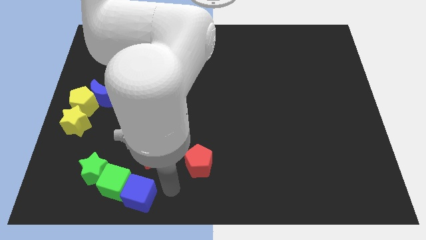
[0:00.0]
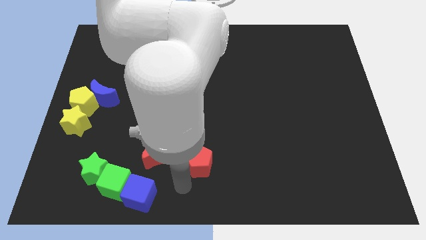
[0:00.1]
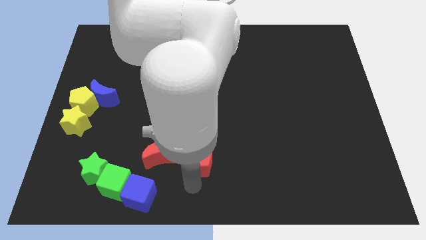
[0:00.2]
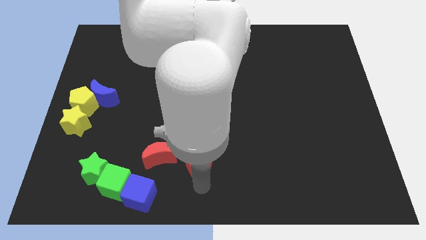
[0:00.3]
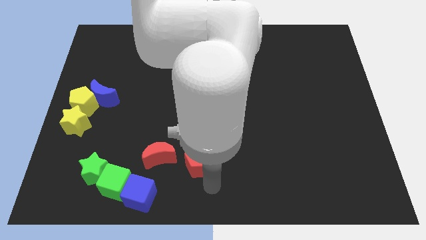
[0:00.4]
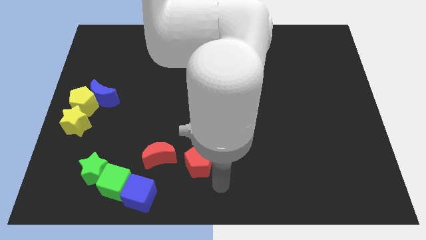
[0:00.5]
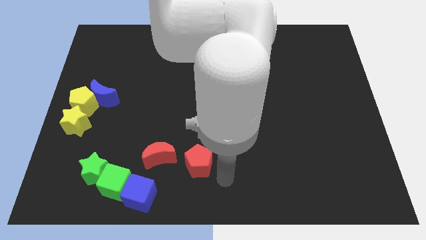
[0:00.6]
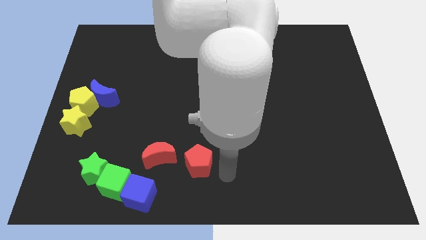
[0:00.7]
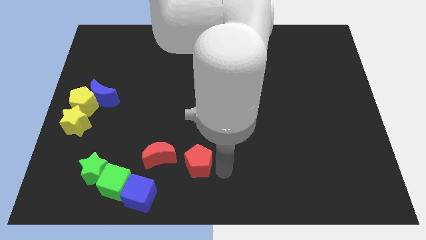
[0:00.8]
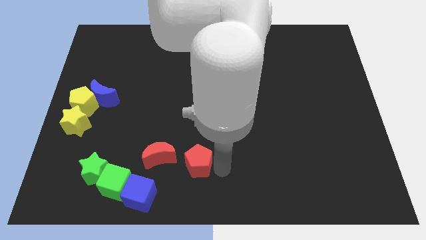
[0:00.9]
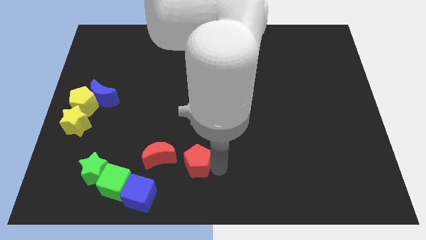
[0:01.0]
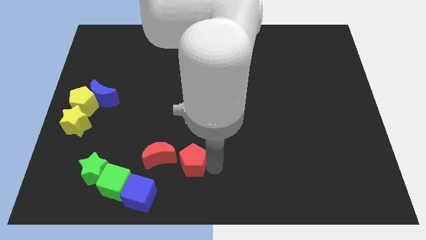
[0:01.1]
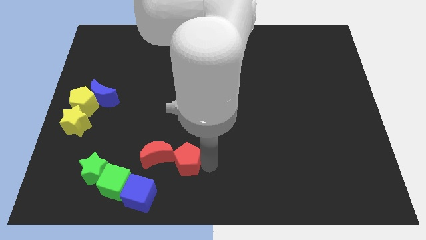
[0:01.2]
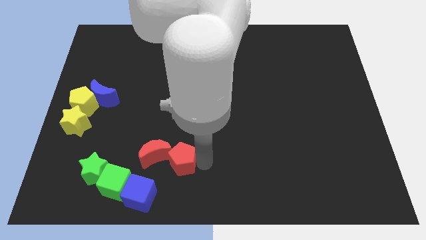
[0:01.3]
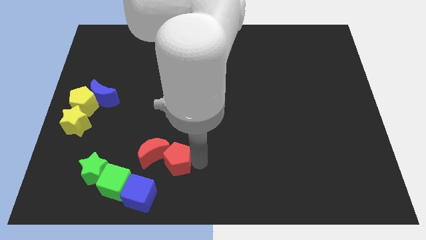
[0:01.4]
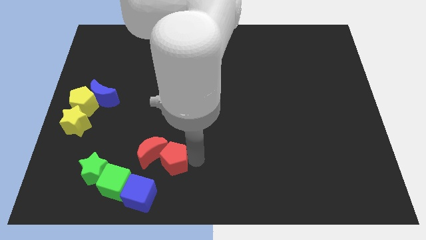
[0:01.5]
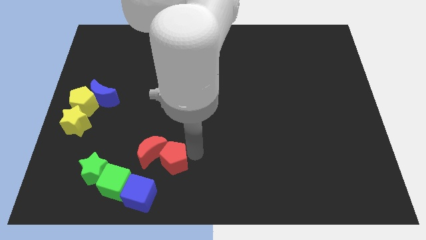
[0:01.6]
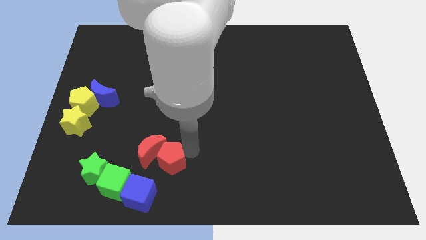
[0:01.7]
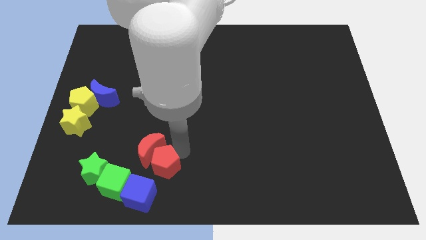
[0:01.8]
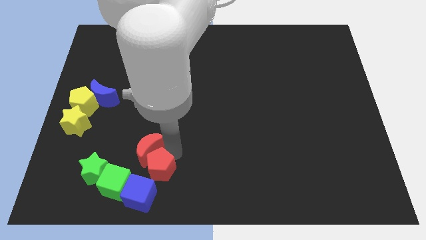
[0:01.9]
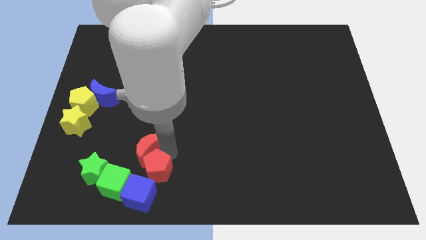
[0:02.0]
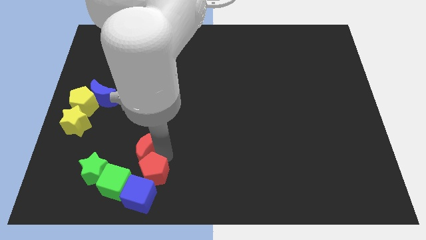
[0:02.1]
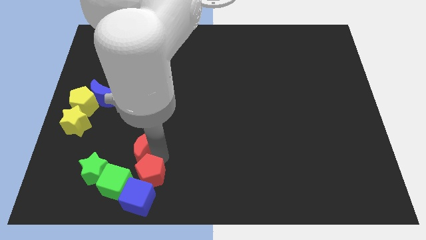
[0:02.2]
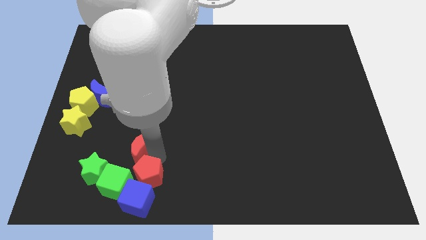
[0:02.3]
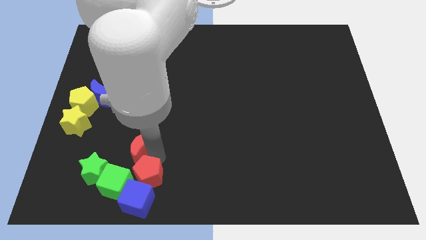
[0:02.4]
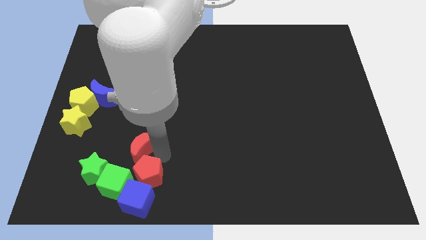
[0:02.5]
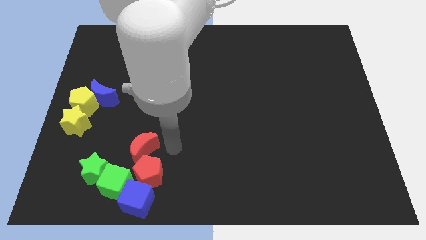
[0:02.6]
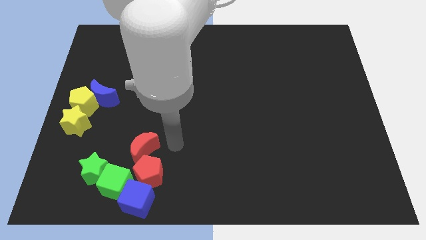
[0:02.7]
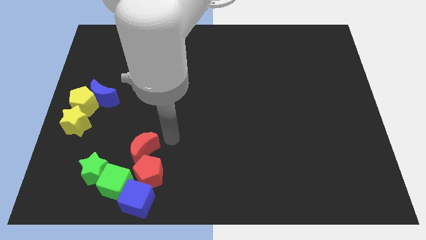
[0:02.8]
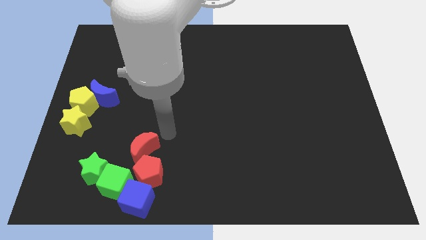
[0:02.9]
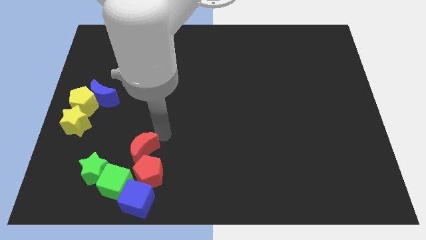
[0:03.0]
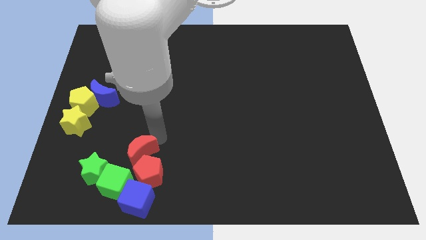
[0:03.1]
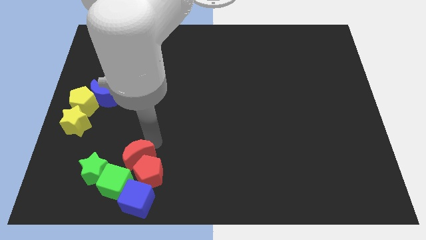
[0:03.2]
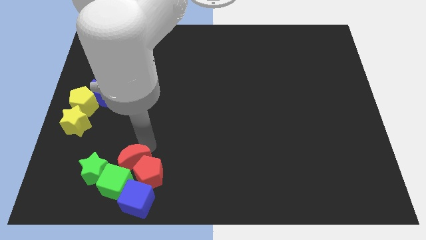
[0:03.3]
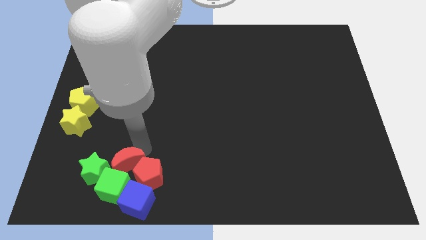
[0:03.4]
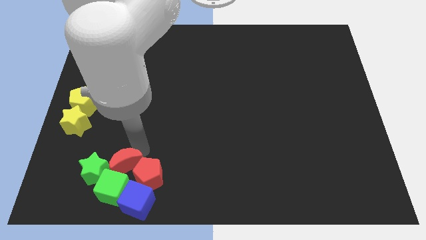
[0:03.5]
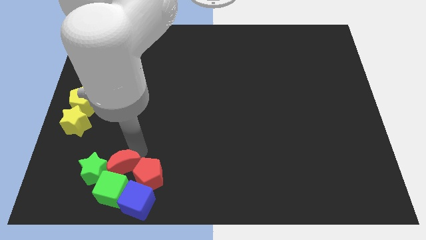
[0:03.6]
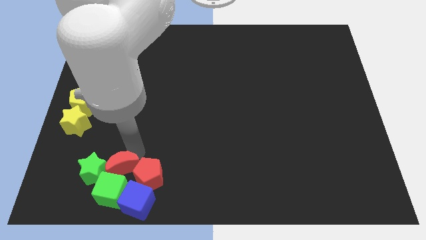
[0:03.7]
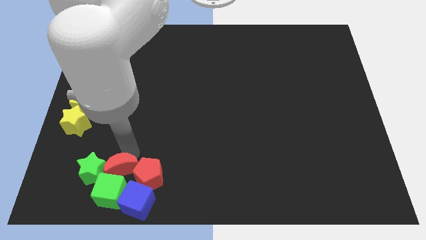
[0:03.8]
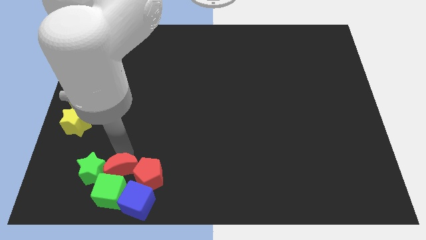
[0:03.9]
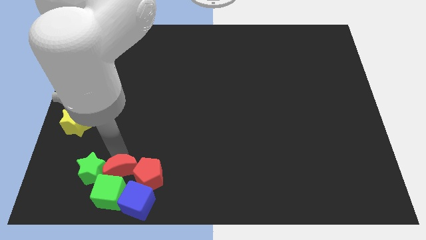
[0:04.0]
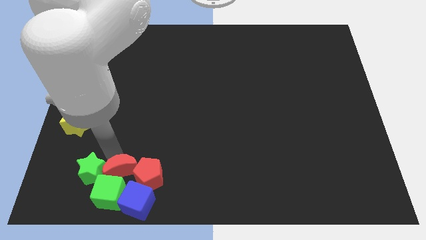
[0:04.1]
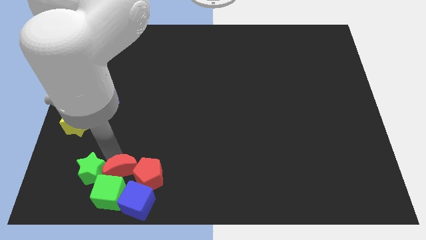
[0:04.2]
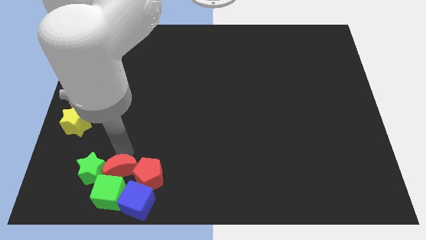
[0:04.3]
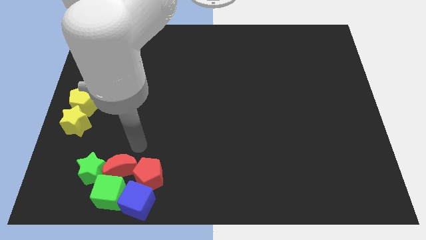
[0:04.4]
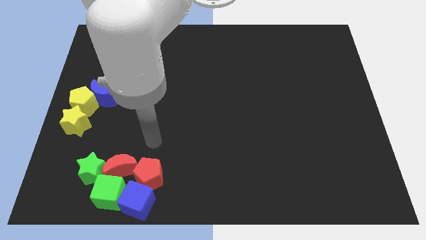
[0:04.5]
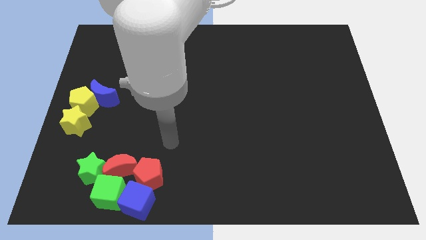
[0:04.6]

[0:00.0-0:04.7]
place the red color blocks on top of blue cube and green cube

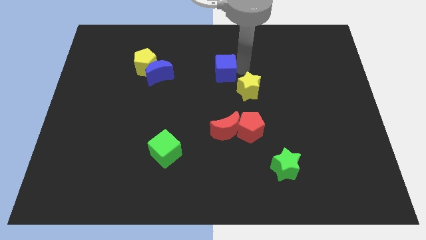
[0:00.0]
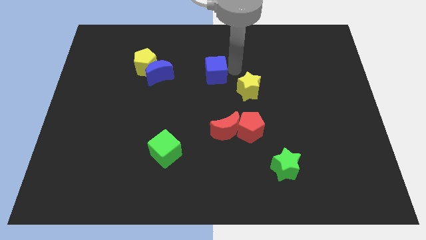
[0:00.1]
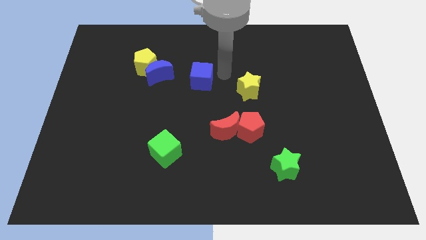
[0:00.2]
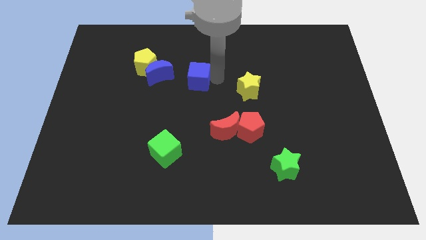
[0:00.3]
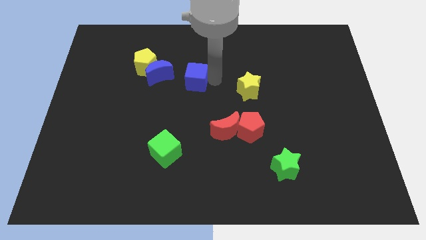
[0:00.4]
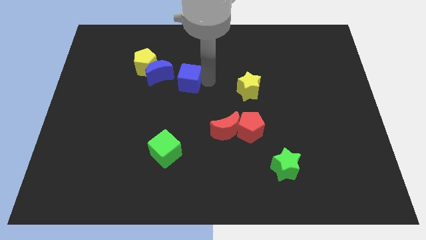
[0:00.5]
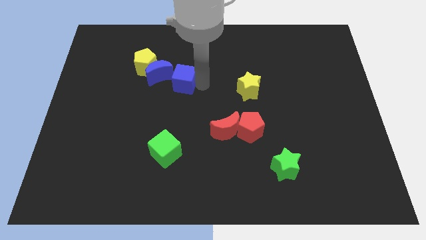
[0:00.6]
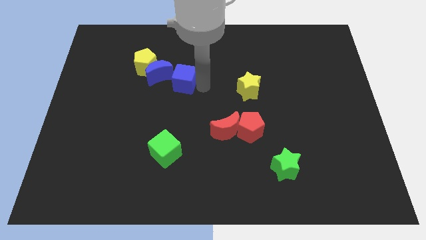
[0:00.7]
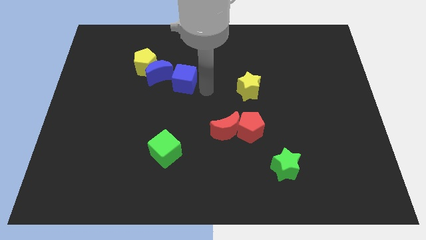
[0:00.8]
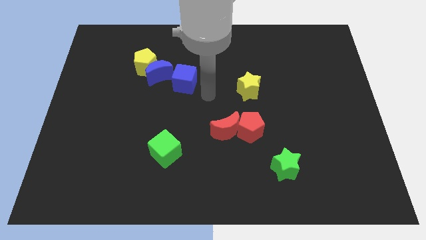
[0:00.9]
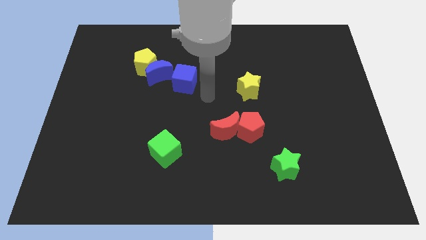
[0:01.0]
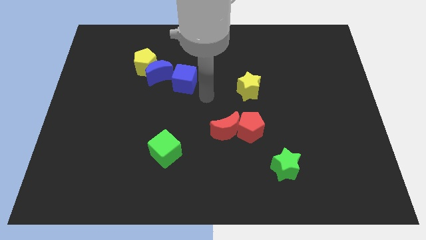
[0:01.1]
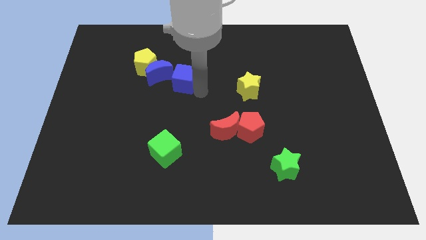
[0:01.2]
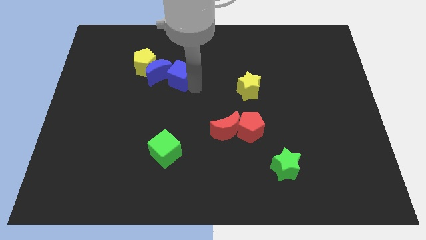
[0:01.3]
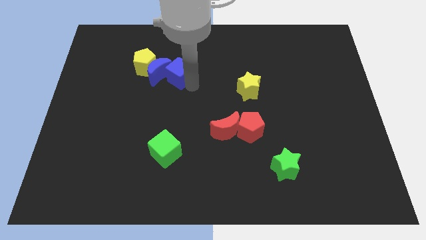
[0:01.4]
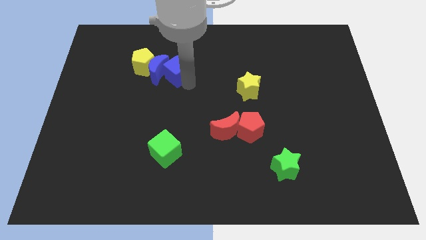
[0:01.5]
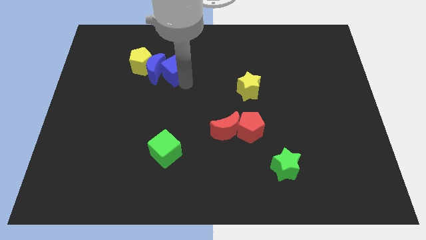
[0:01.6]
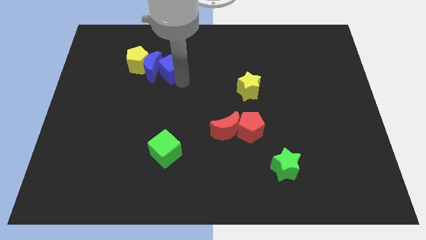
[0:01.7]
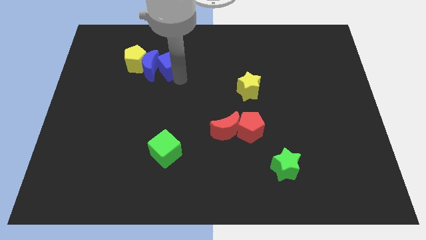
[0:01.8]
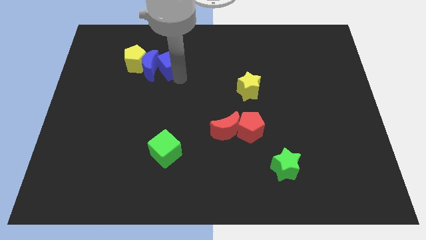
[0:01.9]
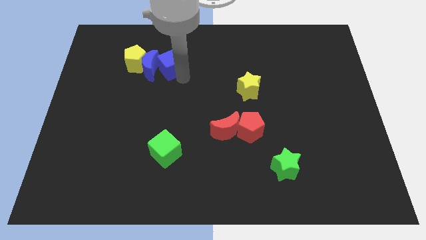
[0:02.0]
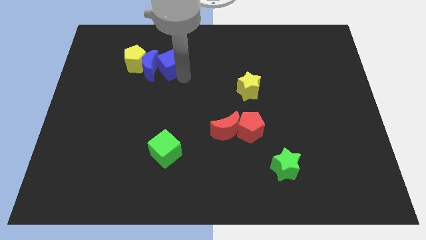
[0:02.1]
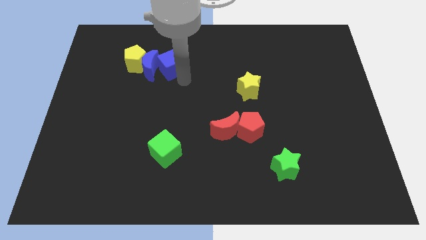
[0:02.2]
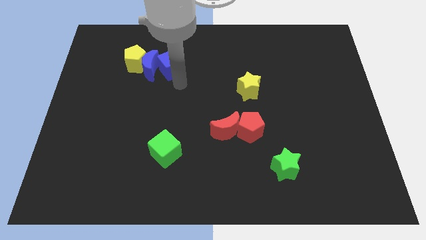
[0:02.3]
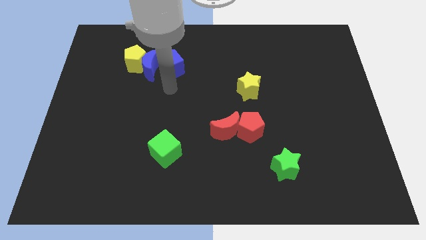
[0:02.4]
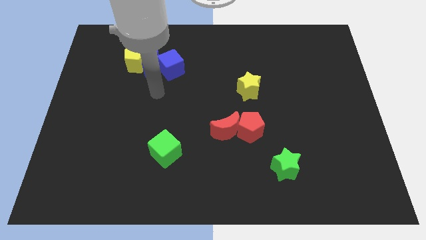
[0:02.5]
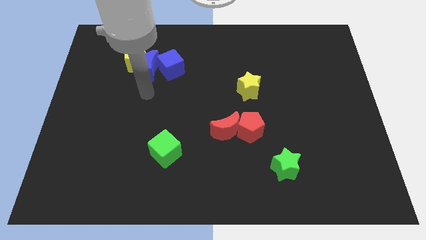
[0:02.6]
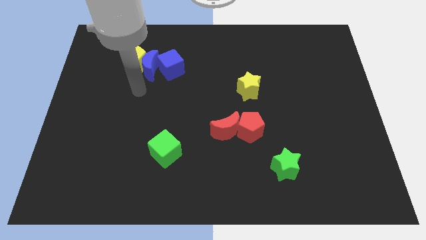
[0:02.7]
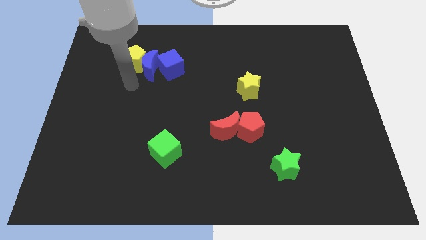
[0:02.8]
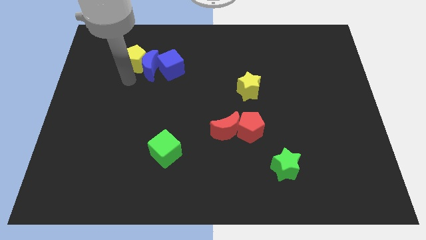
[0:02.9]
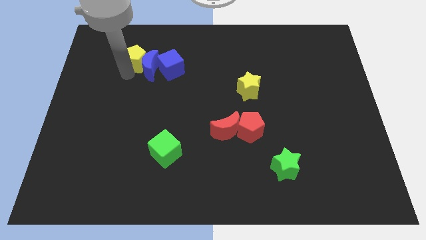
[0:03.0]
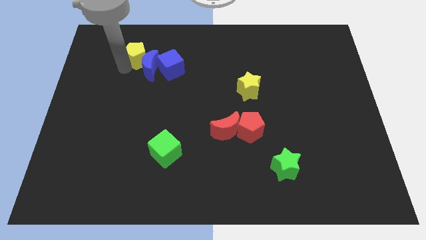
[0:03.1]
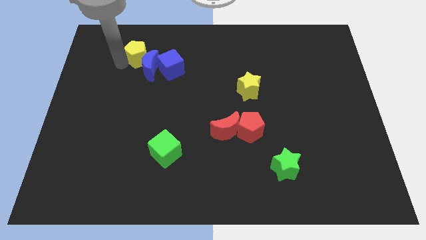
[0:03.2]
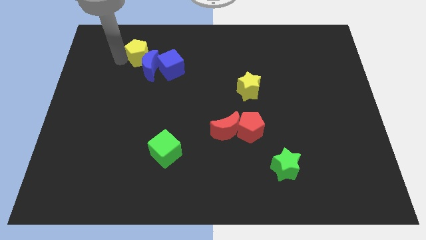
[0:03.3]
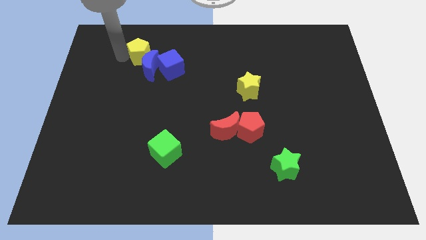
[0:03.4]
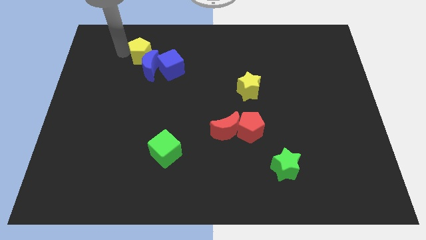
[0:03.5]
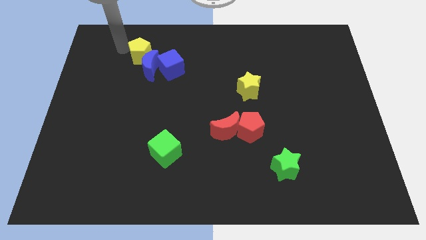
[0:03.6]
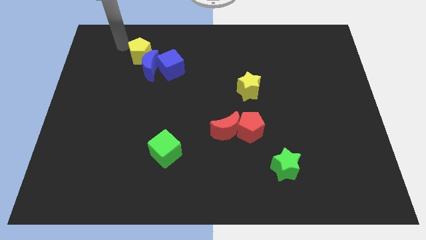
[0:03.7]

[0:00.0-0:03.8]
move the blue cube into the blue crescent

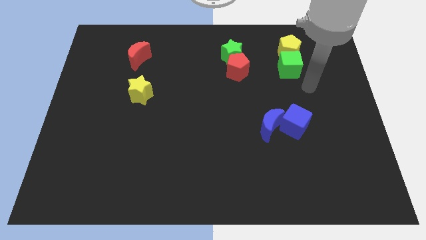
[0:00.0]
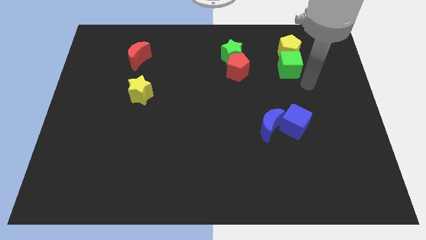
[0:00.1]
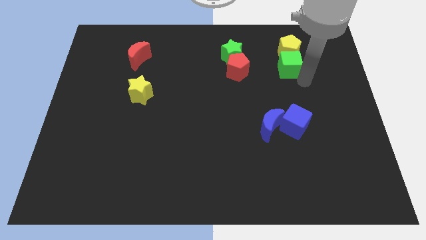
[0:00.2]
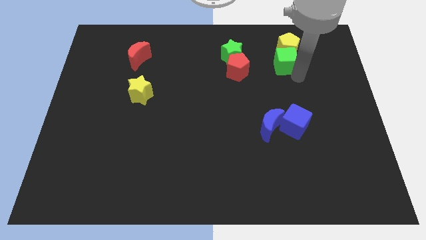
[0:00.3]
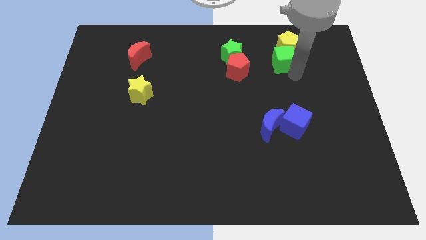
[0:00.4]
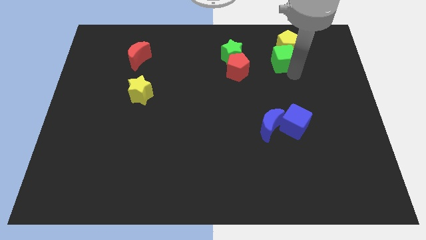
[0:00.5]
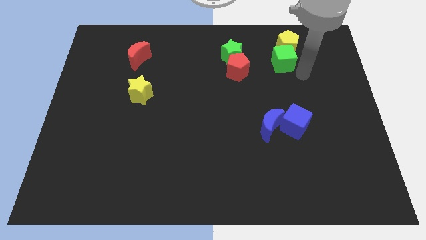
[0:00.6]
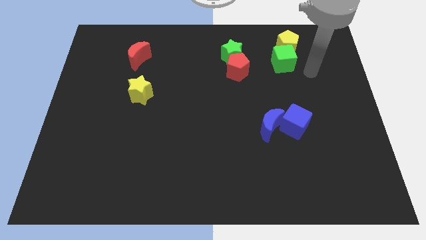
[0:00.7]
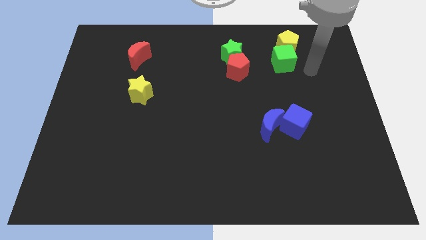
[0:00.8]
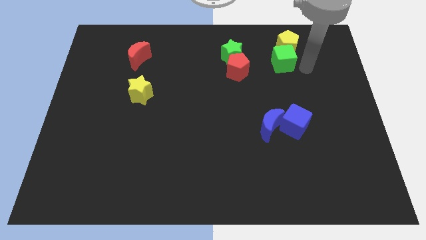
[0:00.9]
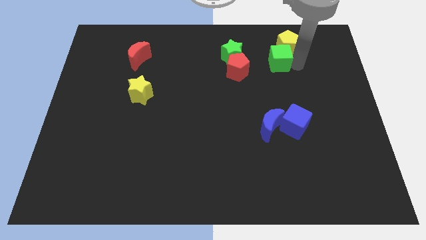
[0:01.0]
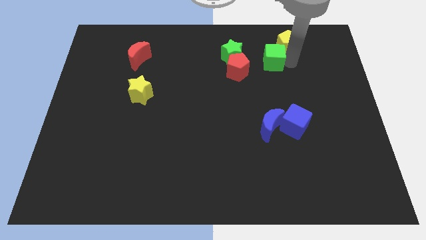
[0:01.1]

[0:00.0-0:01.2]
move the green cube towards the right side of the green star
